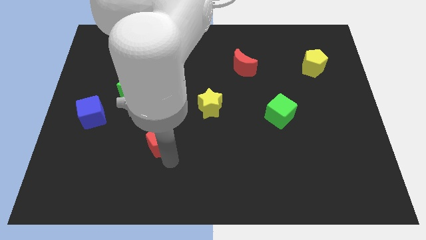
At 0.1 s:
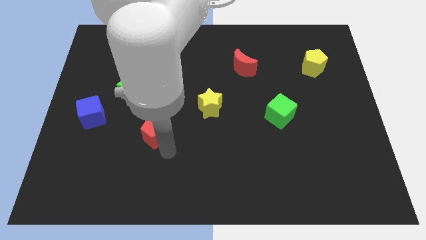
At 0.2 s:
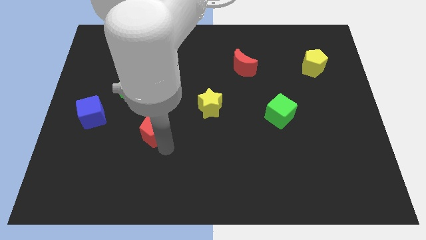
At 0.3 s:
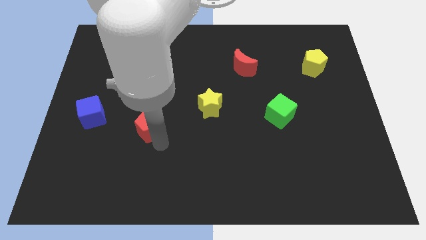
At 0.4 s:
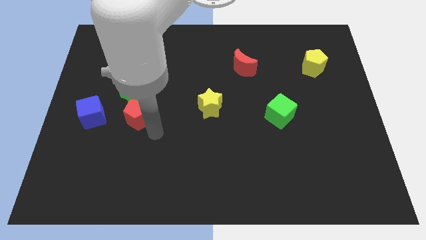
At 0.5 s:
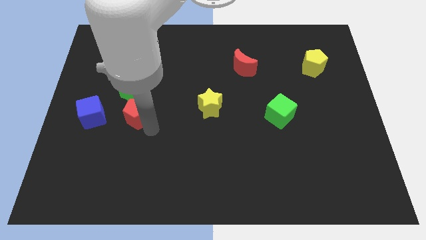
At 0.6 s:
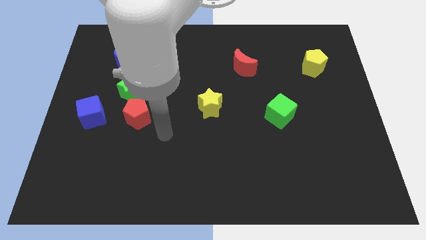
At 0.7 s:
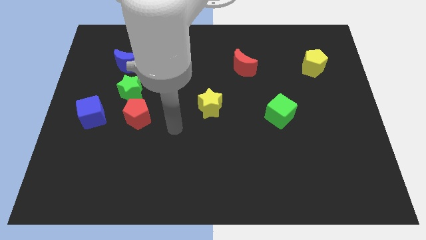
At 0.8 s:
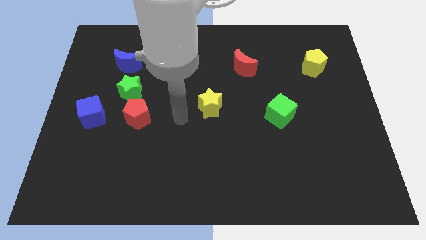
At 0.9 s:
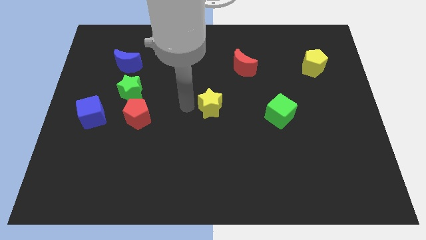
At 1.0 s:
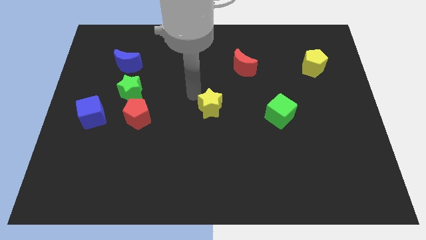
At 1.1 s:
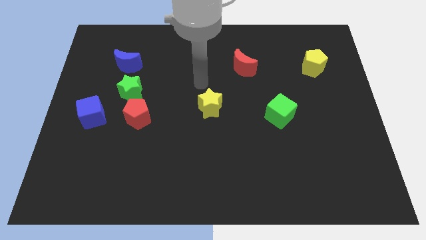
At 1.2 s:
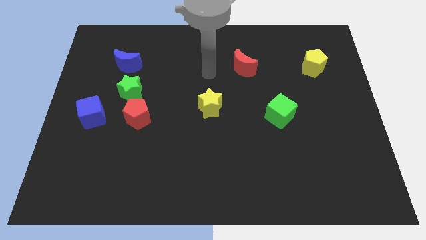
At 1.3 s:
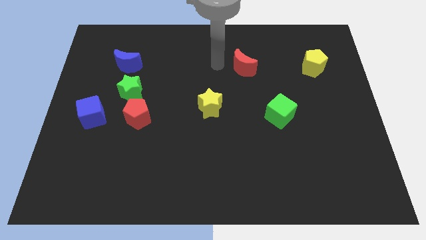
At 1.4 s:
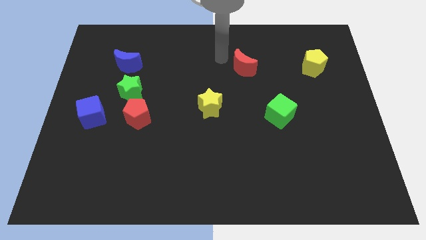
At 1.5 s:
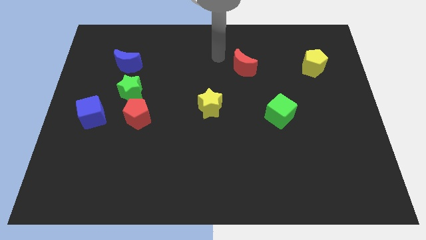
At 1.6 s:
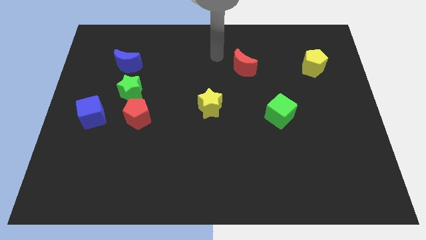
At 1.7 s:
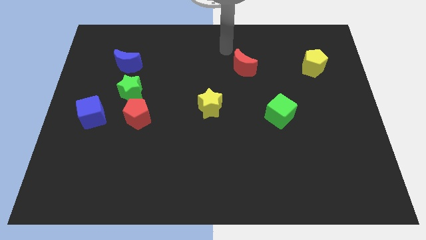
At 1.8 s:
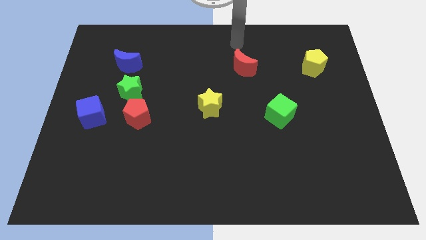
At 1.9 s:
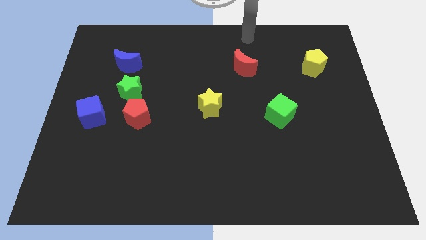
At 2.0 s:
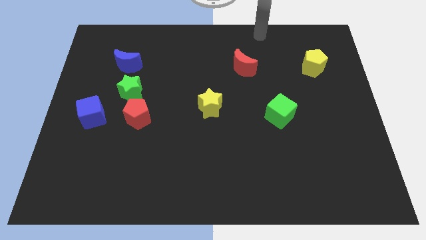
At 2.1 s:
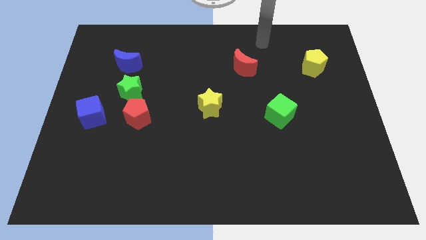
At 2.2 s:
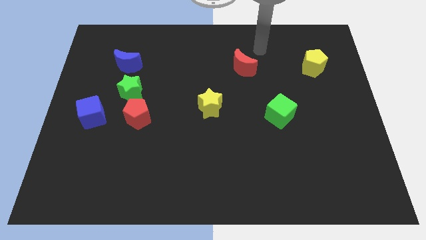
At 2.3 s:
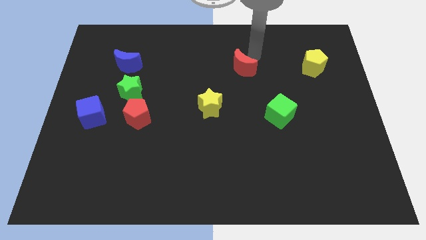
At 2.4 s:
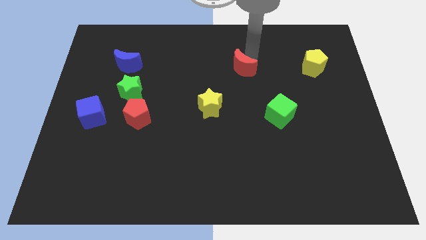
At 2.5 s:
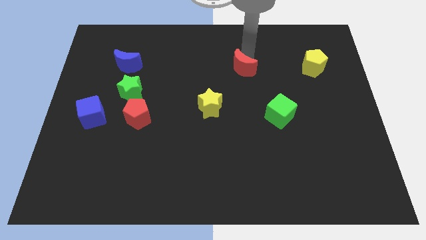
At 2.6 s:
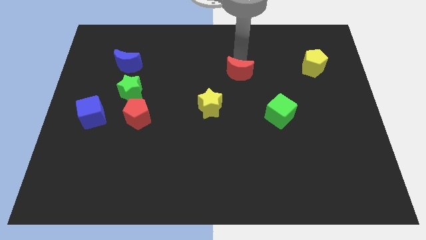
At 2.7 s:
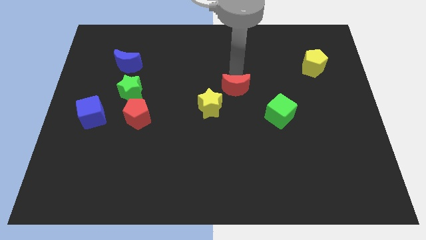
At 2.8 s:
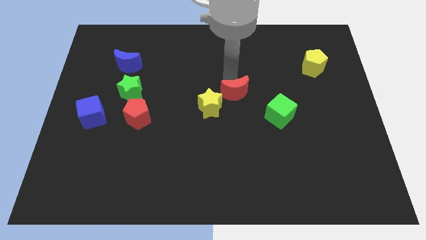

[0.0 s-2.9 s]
place the red moon on the top right side of the yellow star

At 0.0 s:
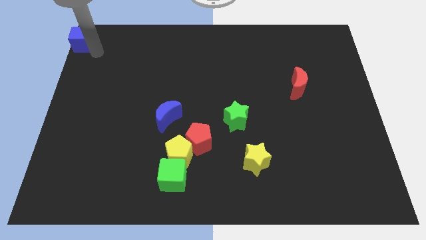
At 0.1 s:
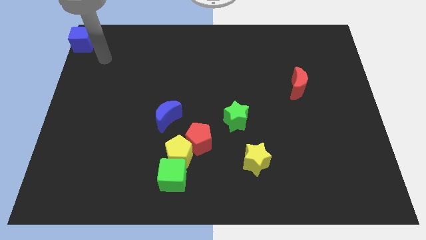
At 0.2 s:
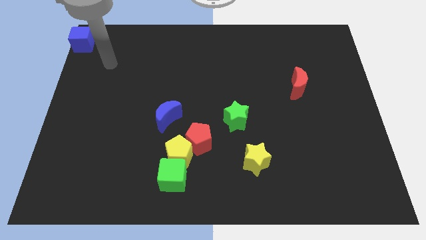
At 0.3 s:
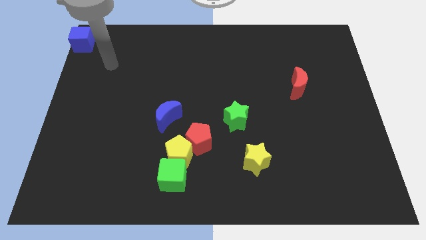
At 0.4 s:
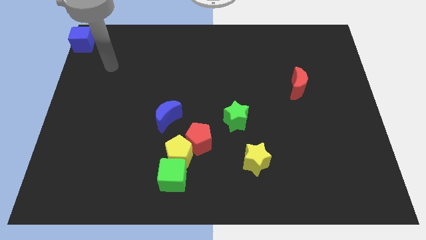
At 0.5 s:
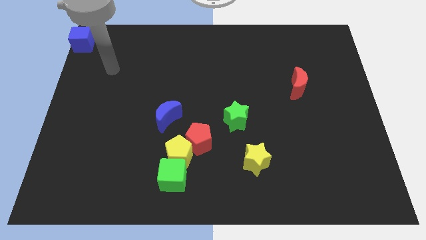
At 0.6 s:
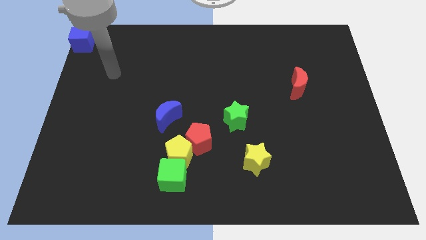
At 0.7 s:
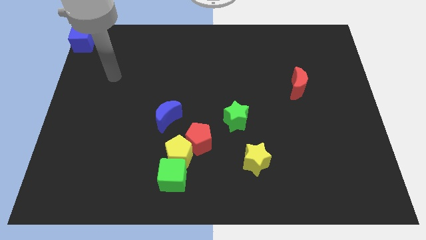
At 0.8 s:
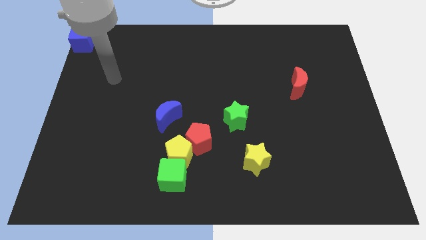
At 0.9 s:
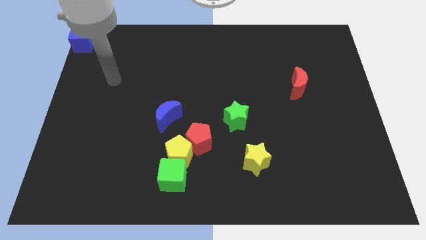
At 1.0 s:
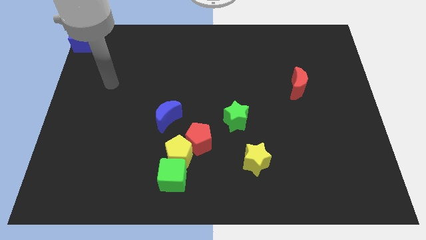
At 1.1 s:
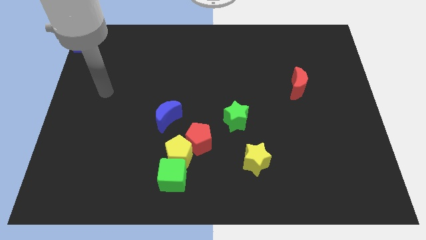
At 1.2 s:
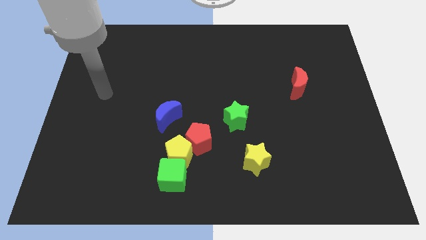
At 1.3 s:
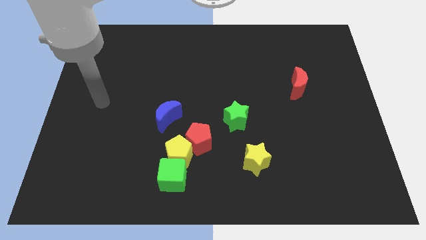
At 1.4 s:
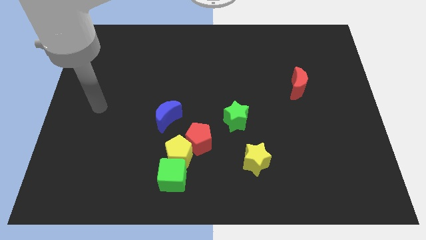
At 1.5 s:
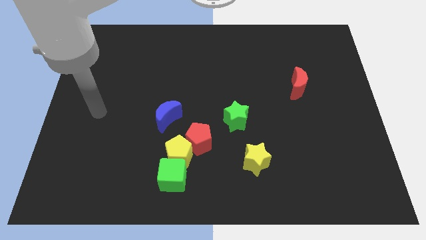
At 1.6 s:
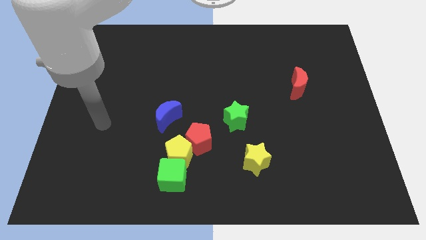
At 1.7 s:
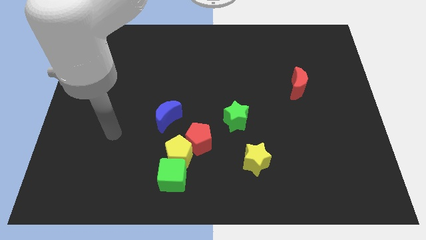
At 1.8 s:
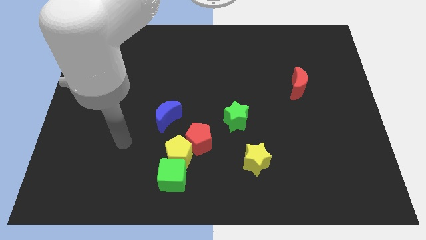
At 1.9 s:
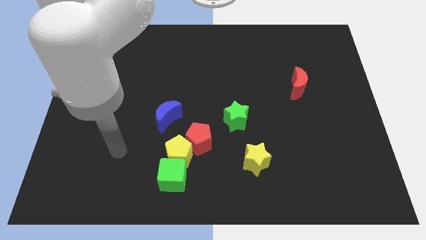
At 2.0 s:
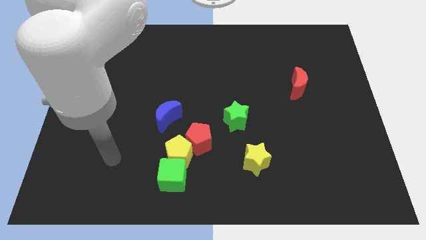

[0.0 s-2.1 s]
go away from the blue cube

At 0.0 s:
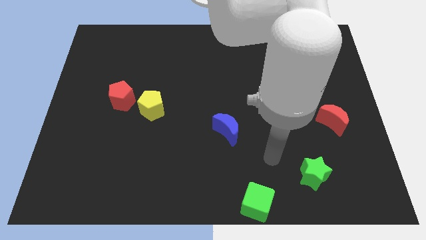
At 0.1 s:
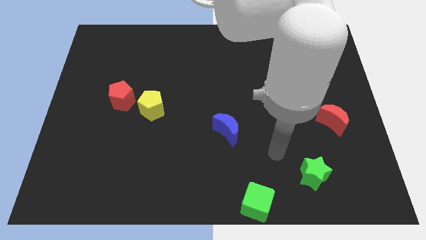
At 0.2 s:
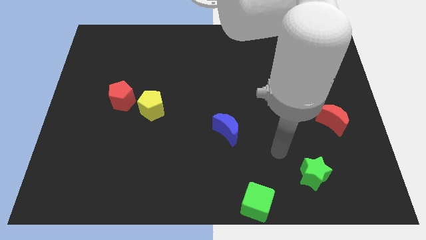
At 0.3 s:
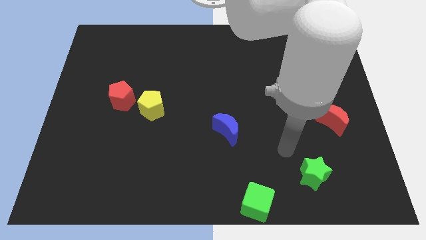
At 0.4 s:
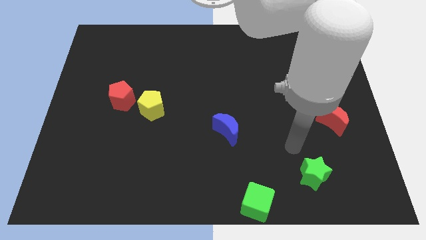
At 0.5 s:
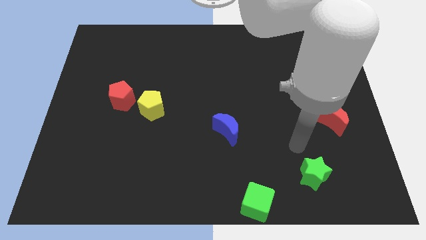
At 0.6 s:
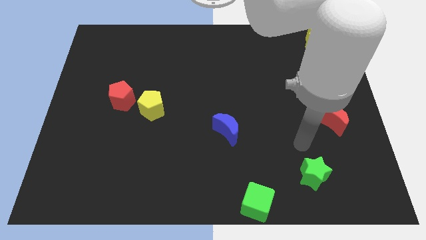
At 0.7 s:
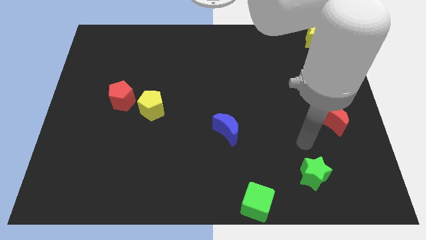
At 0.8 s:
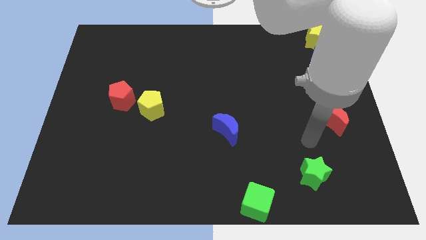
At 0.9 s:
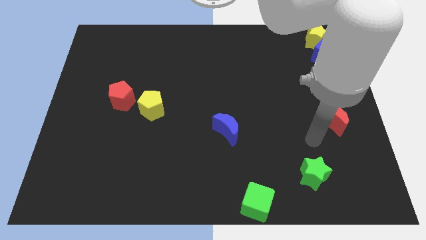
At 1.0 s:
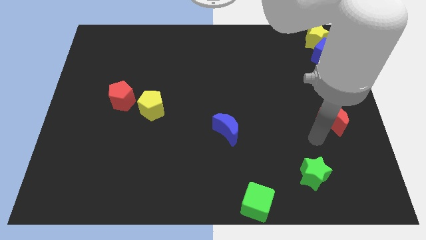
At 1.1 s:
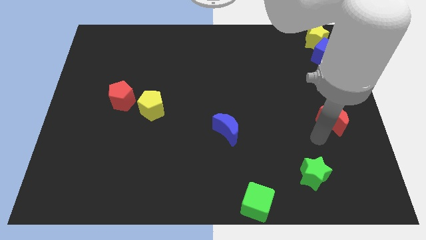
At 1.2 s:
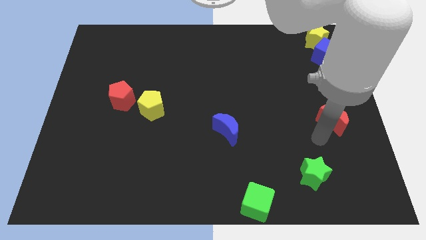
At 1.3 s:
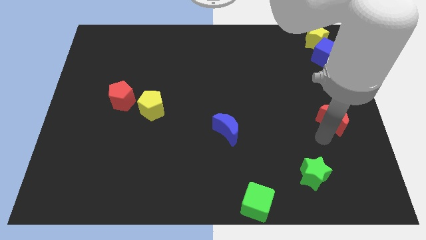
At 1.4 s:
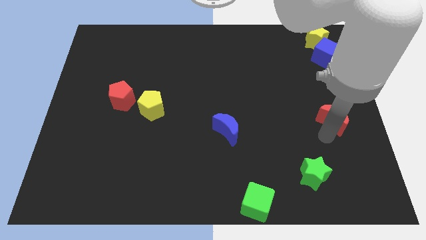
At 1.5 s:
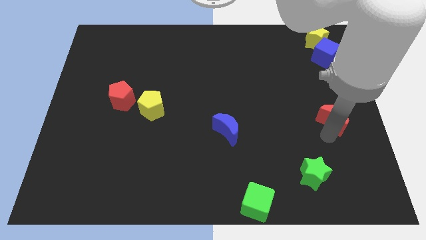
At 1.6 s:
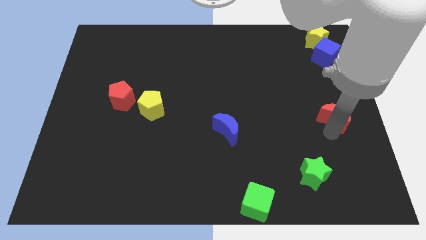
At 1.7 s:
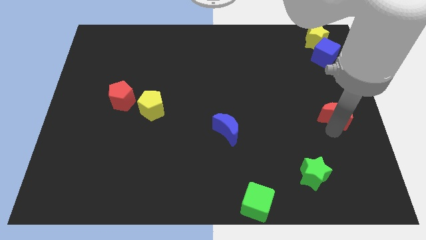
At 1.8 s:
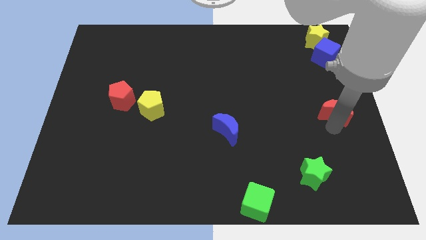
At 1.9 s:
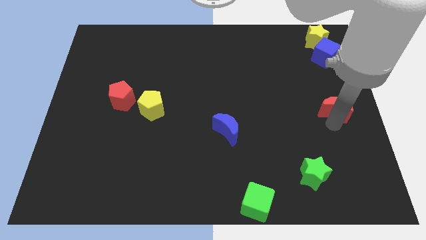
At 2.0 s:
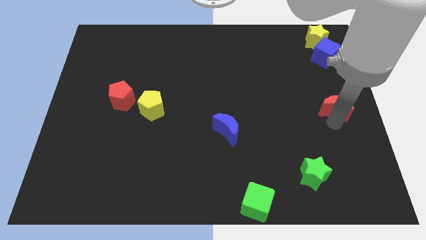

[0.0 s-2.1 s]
move red moon towards center right

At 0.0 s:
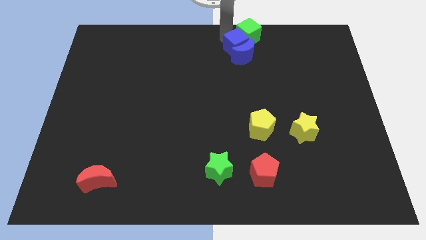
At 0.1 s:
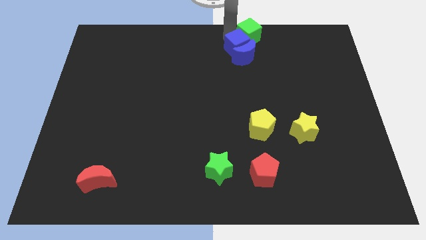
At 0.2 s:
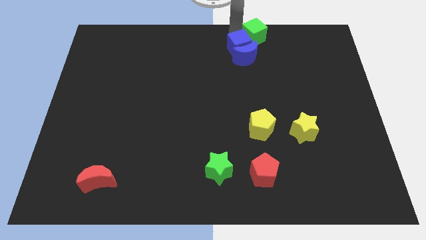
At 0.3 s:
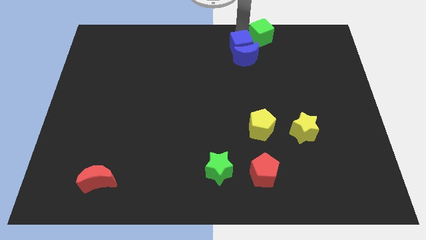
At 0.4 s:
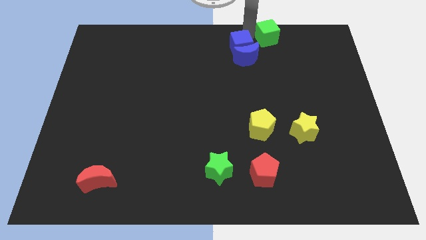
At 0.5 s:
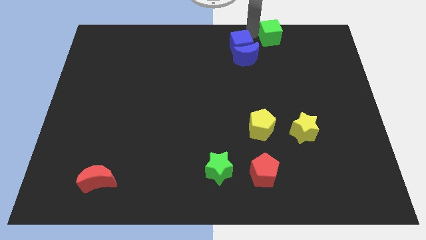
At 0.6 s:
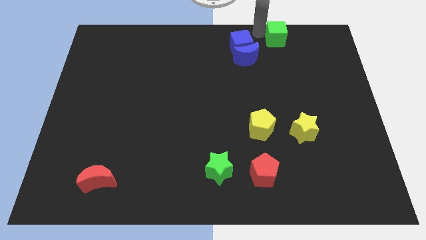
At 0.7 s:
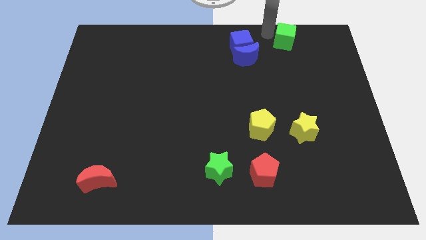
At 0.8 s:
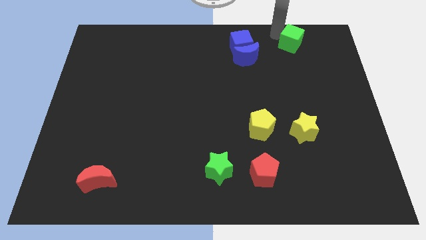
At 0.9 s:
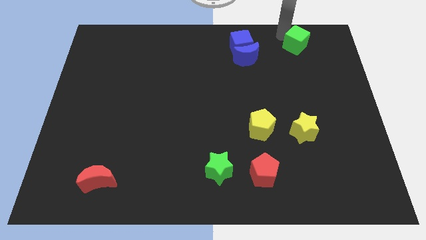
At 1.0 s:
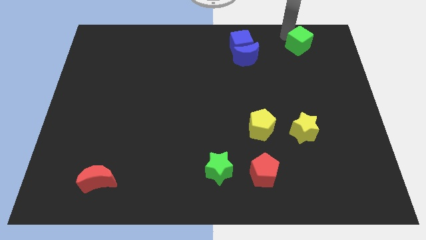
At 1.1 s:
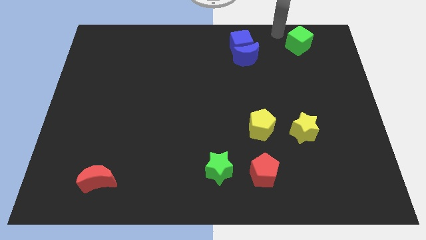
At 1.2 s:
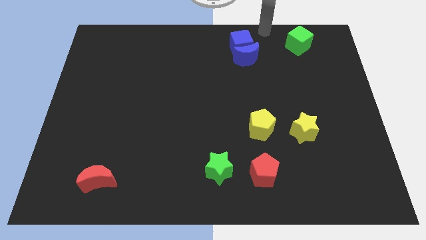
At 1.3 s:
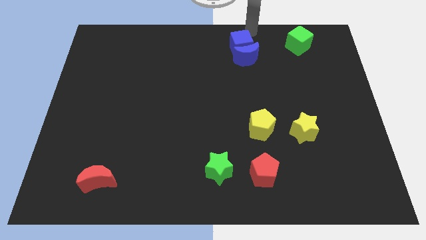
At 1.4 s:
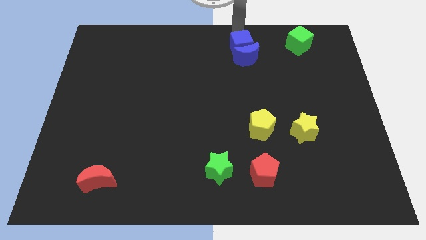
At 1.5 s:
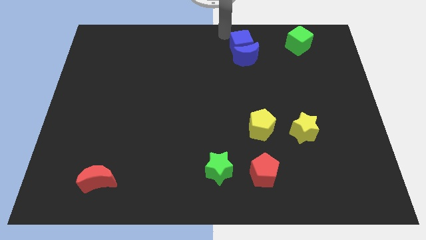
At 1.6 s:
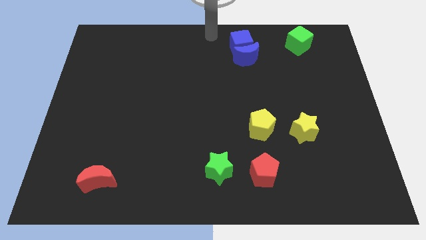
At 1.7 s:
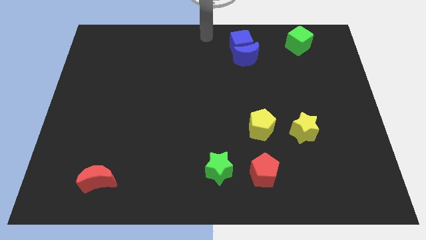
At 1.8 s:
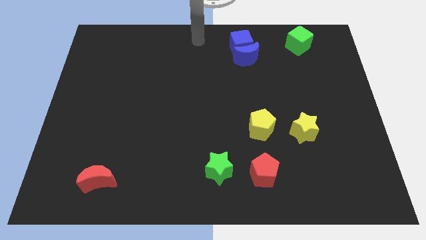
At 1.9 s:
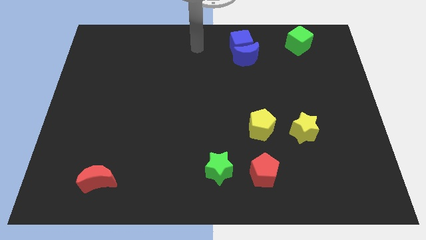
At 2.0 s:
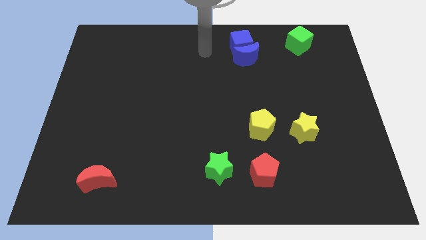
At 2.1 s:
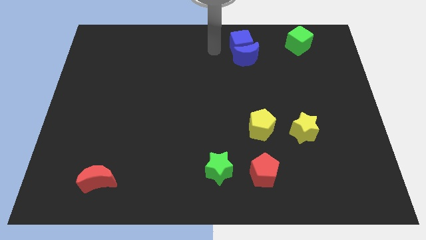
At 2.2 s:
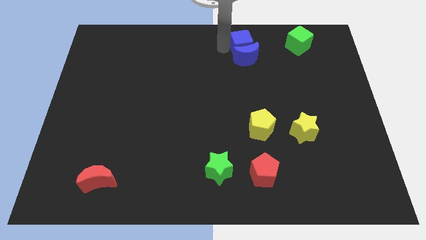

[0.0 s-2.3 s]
separate the green cube from the blue cube
